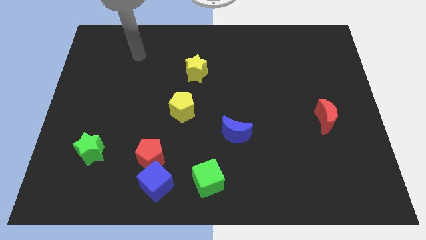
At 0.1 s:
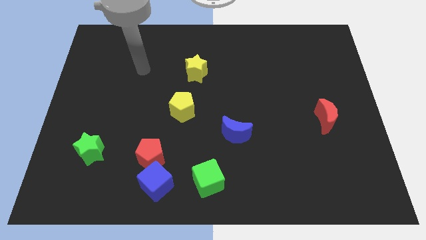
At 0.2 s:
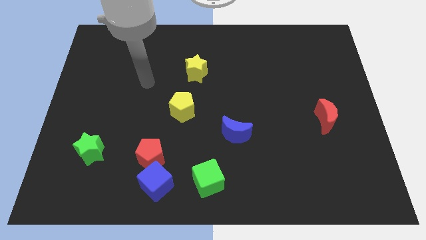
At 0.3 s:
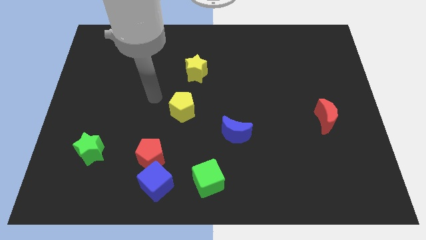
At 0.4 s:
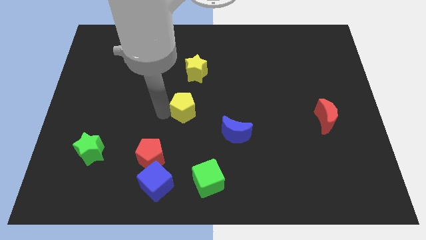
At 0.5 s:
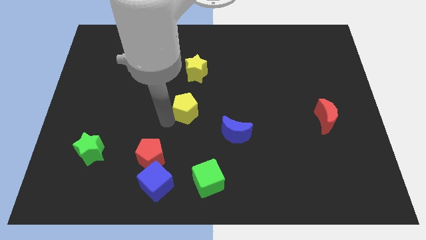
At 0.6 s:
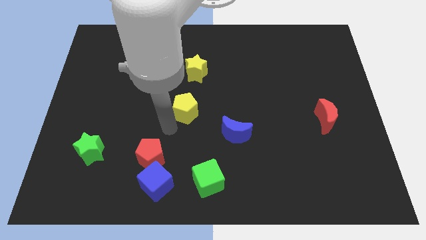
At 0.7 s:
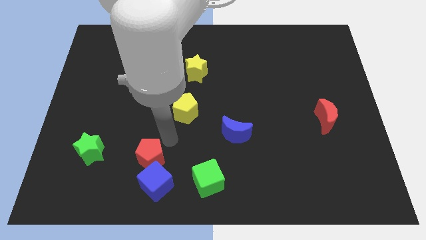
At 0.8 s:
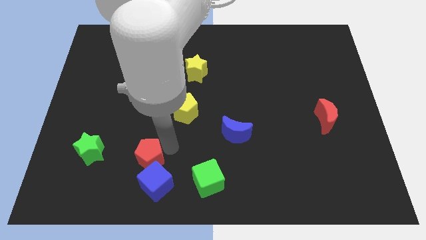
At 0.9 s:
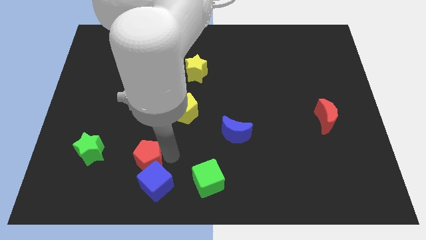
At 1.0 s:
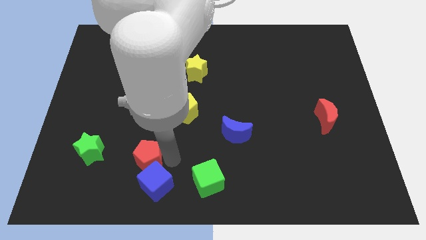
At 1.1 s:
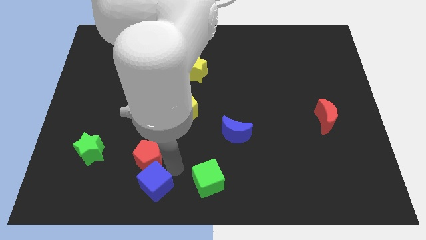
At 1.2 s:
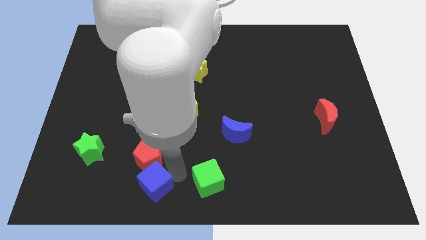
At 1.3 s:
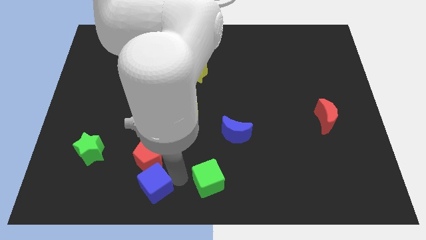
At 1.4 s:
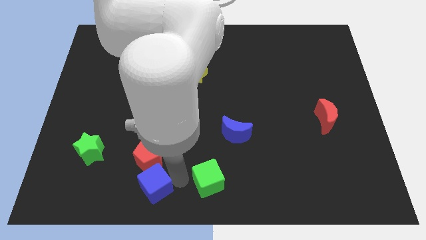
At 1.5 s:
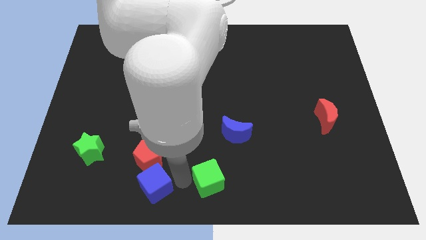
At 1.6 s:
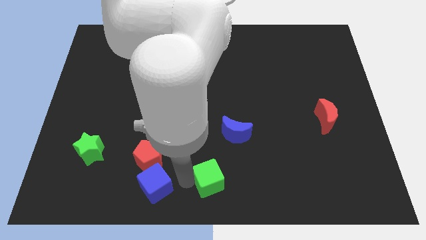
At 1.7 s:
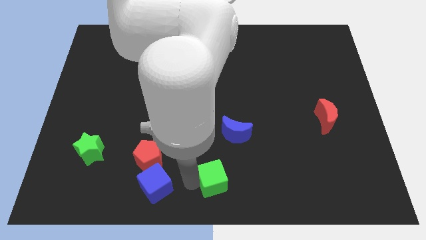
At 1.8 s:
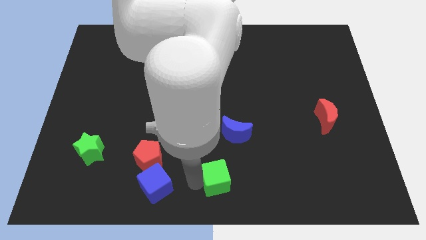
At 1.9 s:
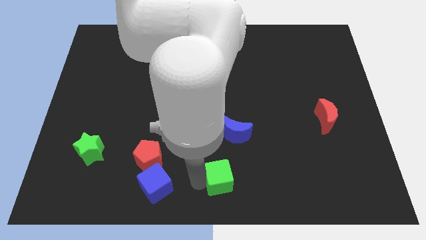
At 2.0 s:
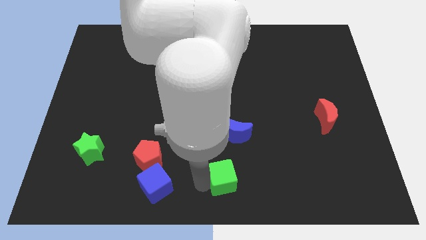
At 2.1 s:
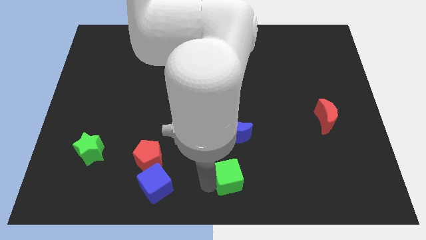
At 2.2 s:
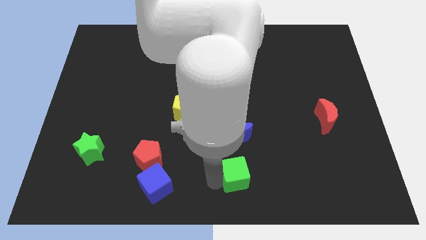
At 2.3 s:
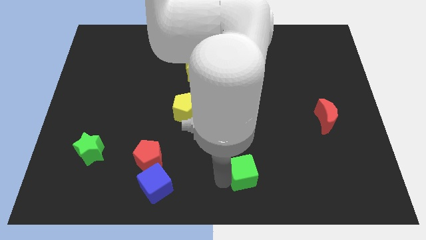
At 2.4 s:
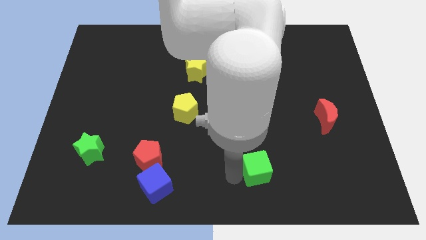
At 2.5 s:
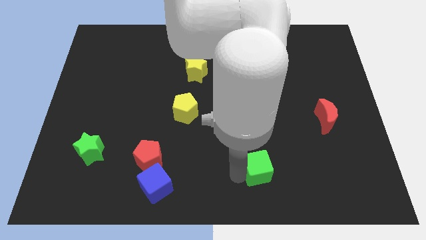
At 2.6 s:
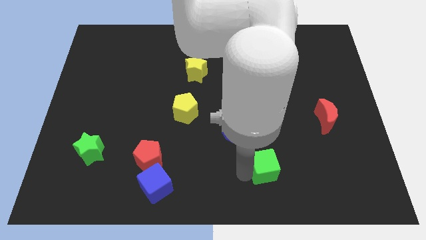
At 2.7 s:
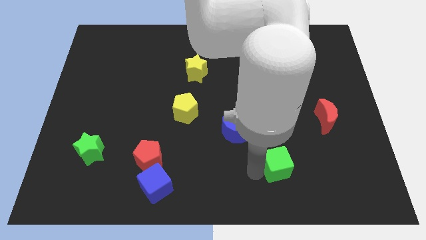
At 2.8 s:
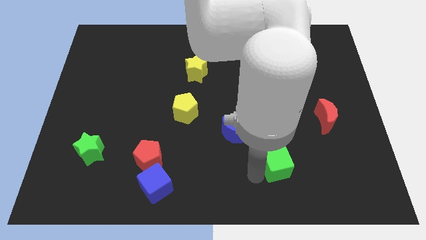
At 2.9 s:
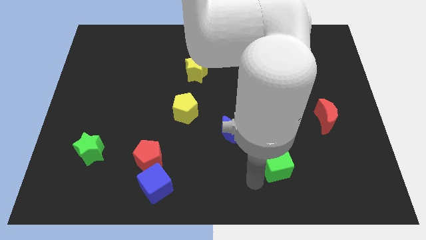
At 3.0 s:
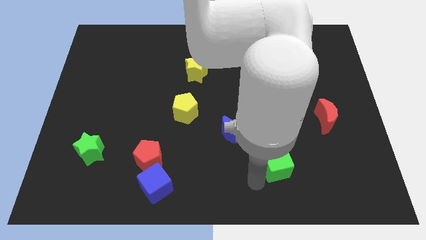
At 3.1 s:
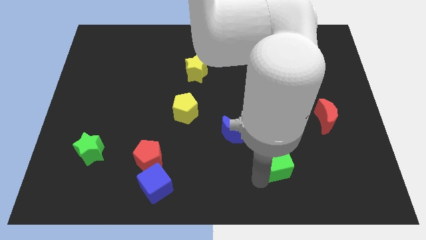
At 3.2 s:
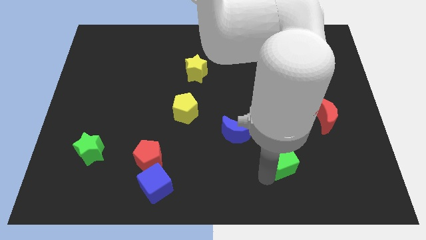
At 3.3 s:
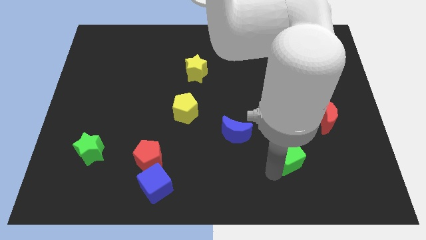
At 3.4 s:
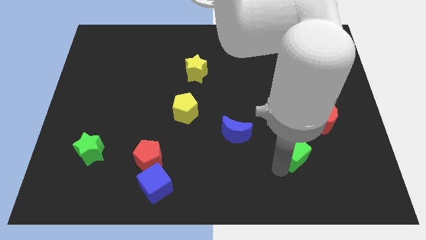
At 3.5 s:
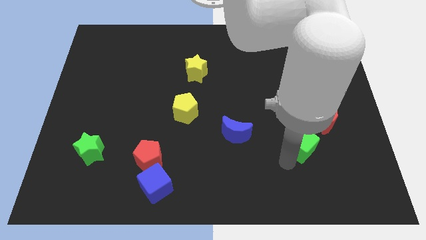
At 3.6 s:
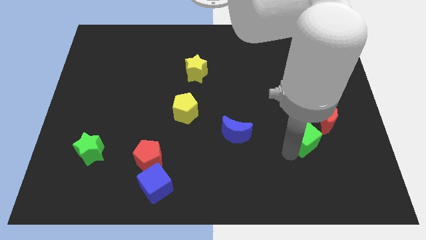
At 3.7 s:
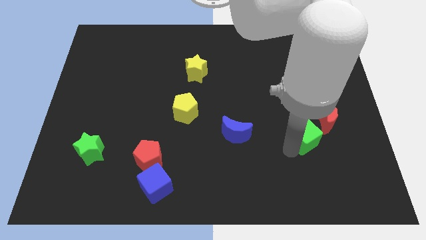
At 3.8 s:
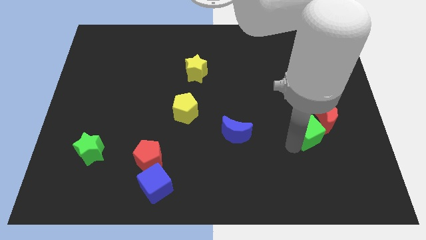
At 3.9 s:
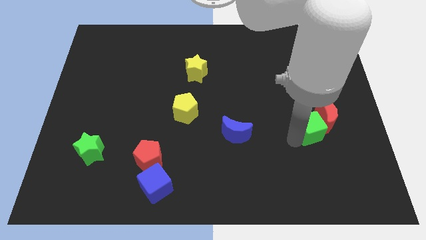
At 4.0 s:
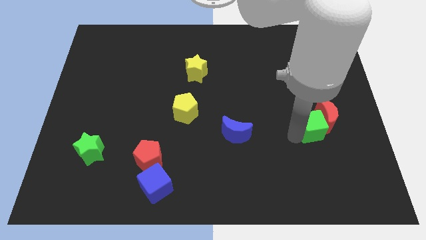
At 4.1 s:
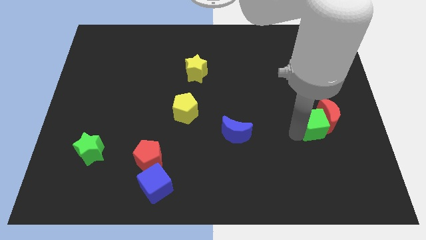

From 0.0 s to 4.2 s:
move the green cube to the red moon

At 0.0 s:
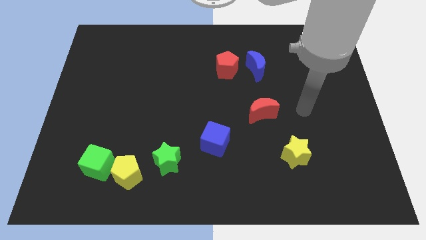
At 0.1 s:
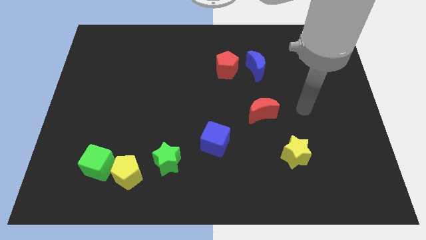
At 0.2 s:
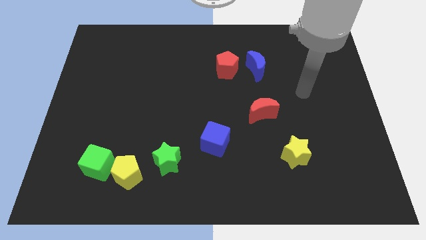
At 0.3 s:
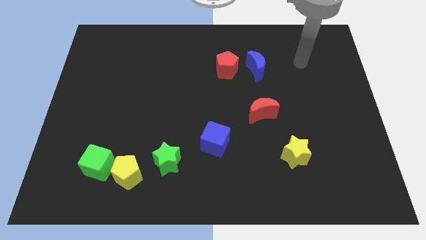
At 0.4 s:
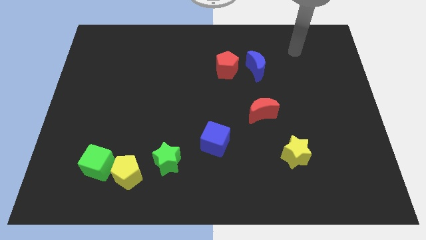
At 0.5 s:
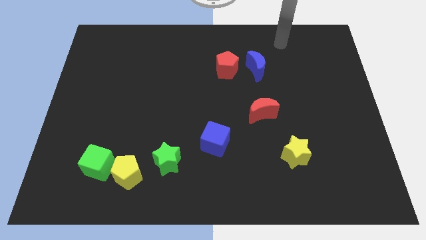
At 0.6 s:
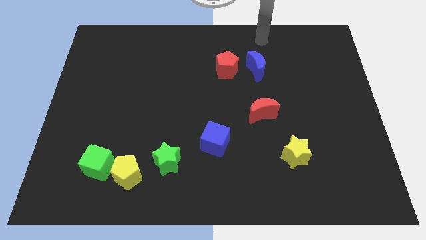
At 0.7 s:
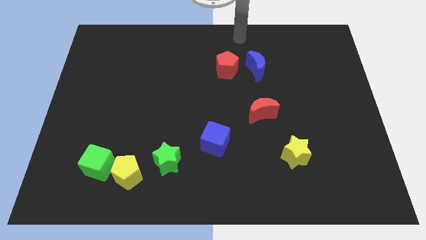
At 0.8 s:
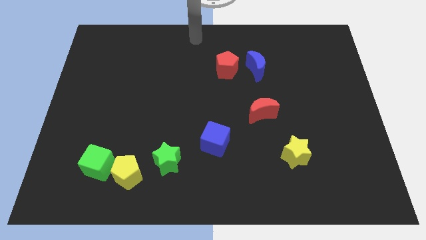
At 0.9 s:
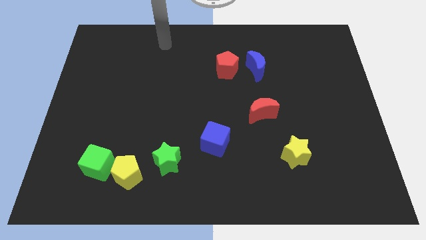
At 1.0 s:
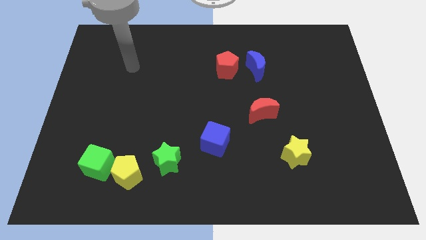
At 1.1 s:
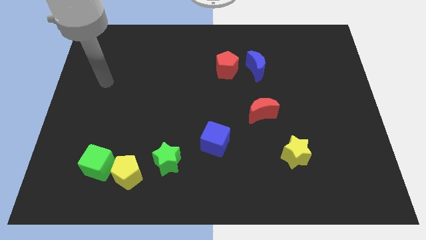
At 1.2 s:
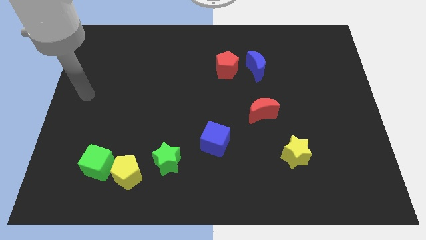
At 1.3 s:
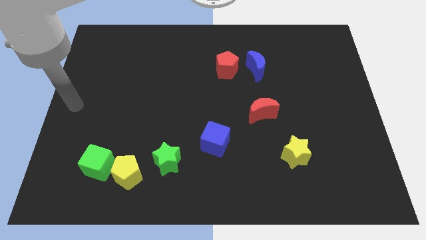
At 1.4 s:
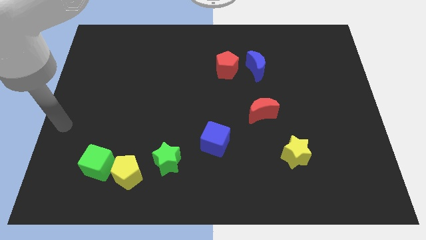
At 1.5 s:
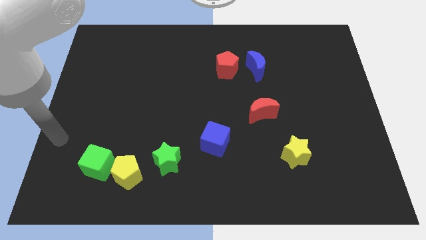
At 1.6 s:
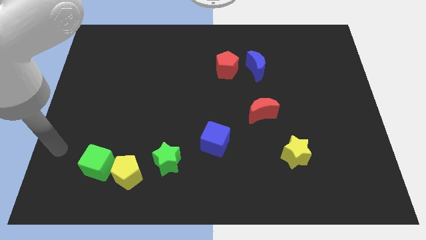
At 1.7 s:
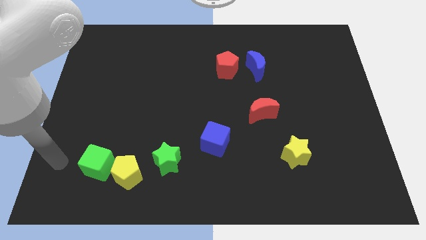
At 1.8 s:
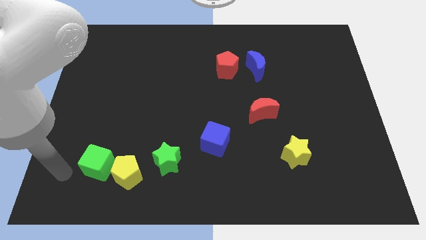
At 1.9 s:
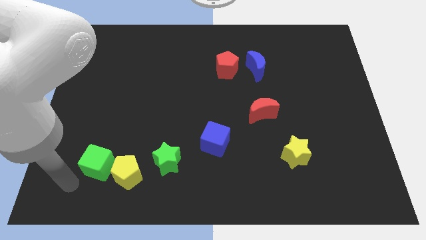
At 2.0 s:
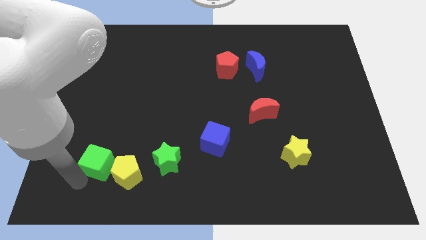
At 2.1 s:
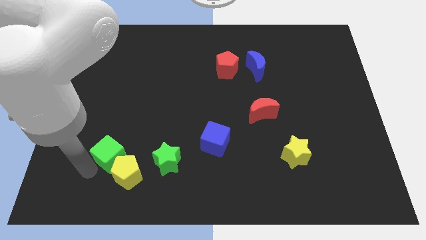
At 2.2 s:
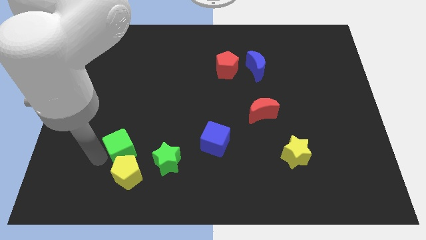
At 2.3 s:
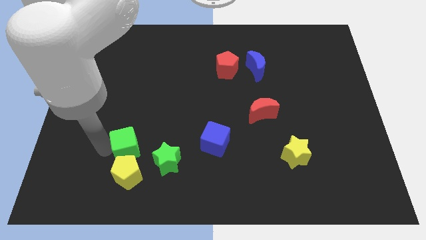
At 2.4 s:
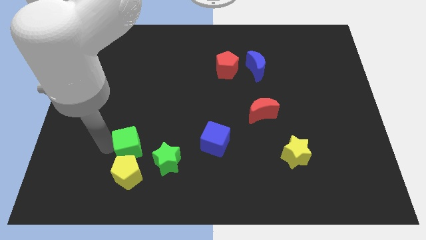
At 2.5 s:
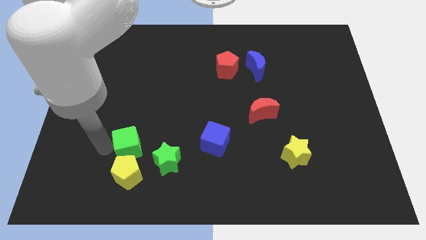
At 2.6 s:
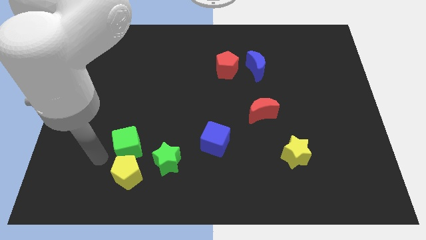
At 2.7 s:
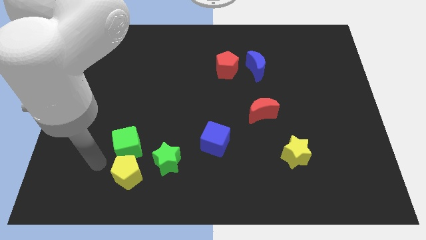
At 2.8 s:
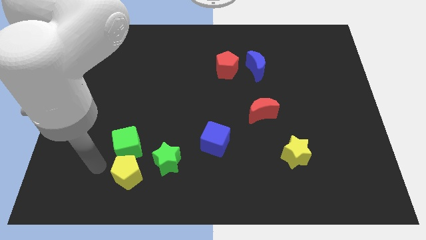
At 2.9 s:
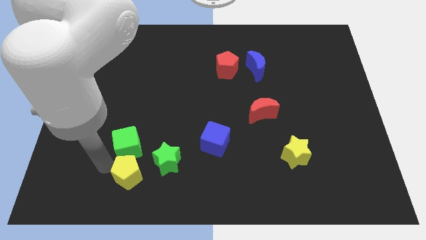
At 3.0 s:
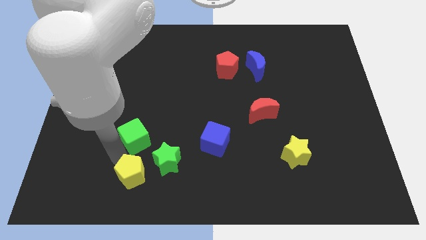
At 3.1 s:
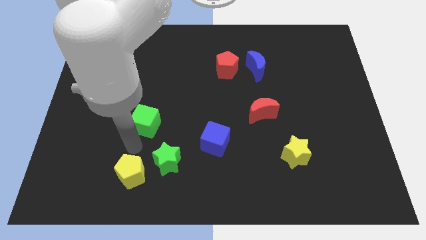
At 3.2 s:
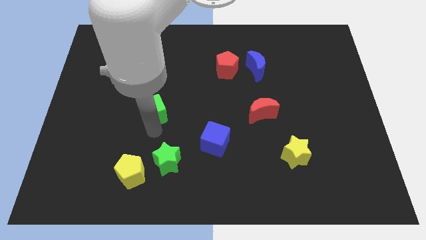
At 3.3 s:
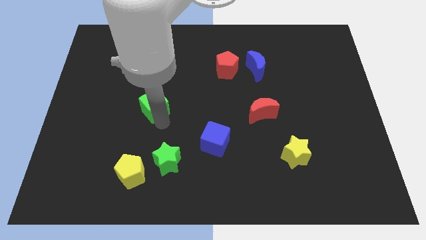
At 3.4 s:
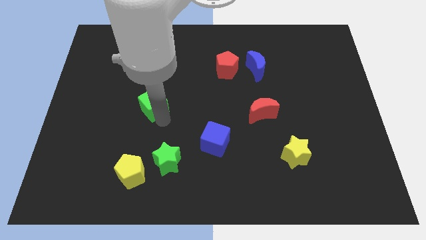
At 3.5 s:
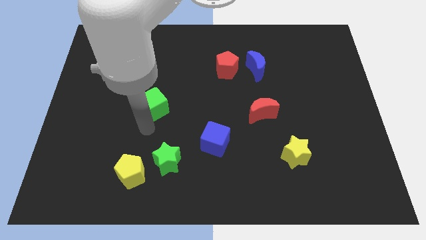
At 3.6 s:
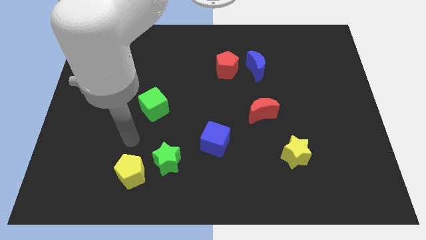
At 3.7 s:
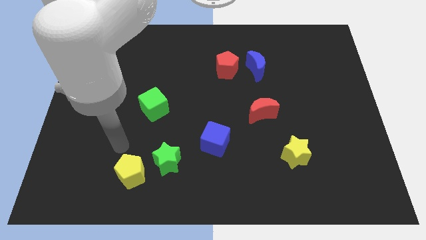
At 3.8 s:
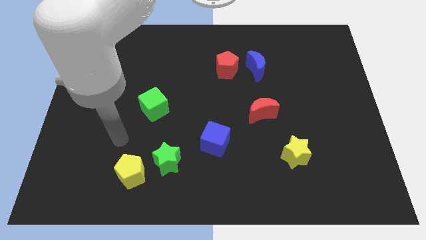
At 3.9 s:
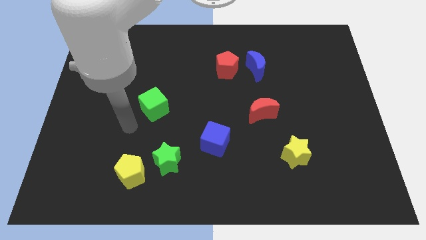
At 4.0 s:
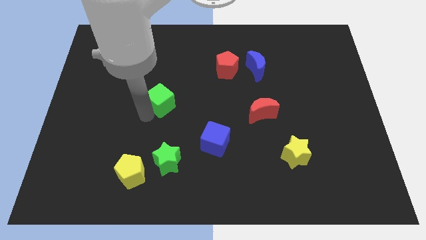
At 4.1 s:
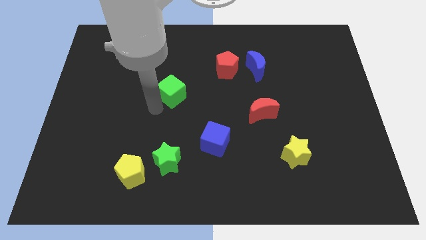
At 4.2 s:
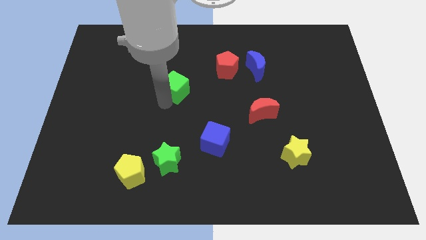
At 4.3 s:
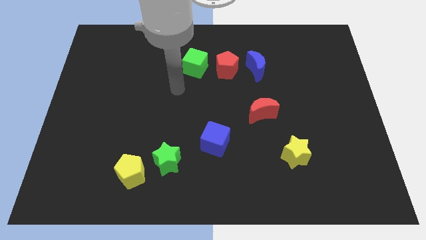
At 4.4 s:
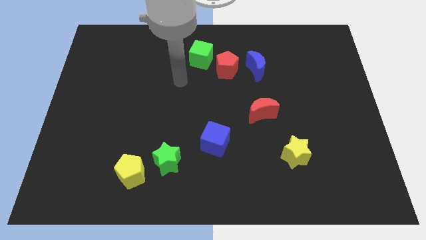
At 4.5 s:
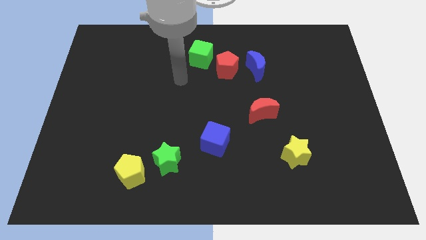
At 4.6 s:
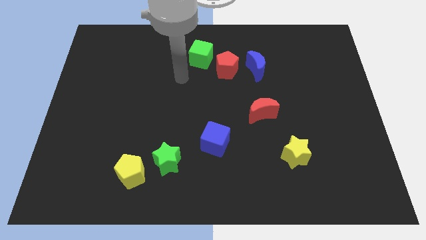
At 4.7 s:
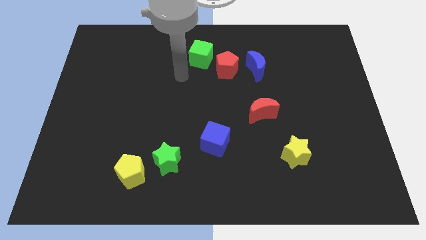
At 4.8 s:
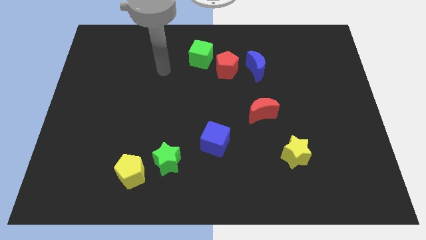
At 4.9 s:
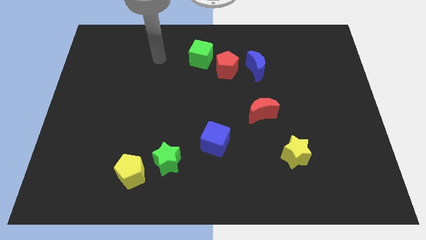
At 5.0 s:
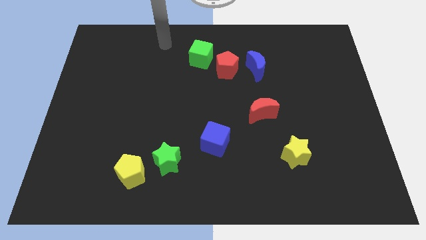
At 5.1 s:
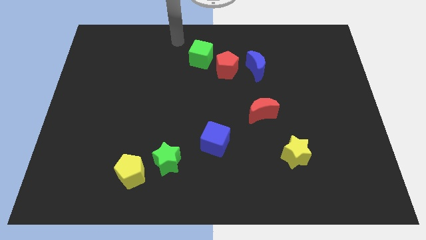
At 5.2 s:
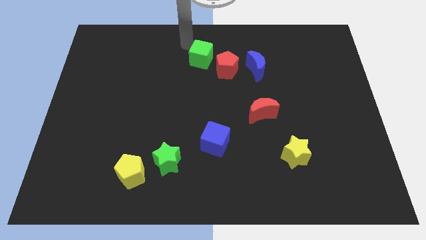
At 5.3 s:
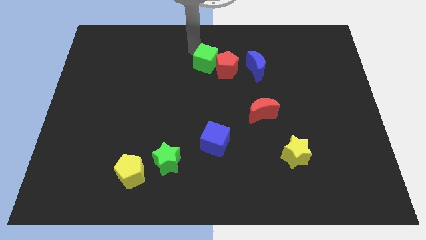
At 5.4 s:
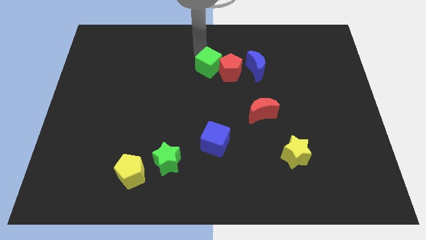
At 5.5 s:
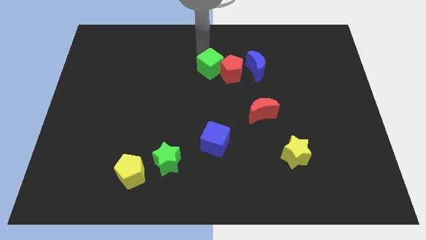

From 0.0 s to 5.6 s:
put the green cube to the red pentagon
